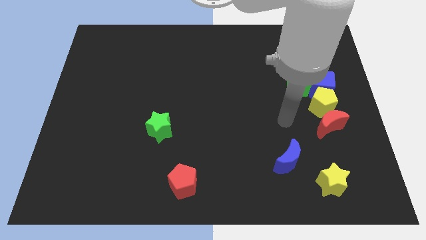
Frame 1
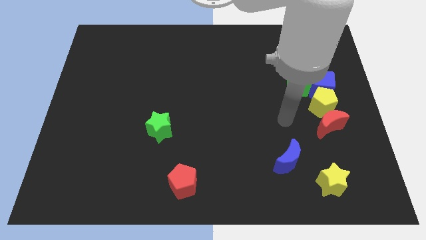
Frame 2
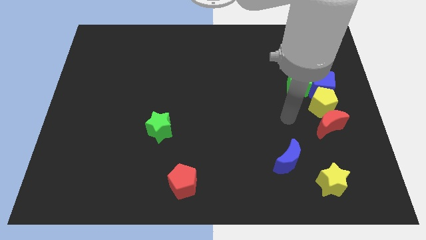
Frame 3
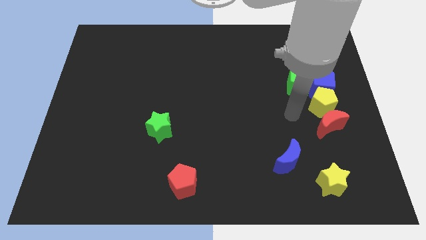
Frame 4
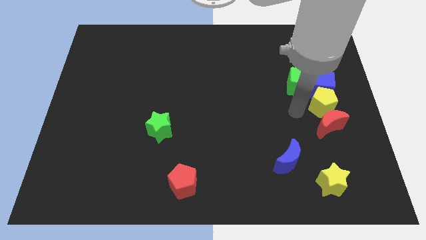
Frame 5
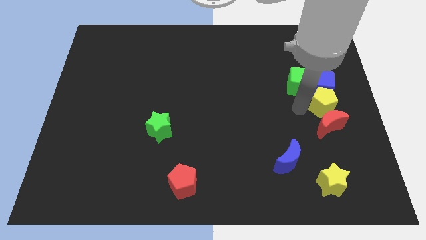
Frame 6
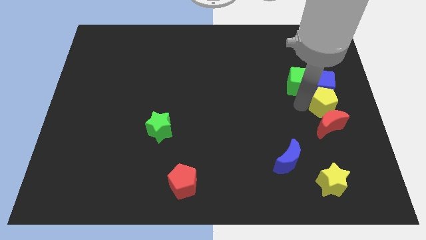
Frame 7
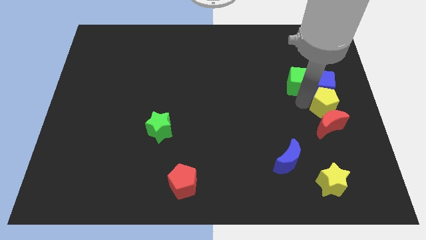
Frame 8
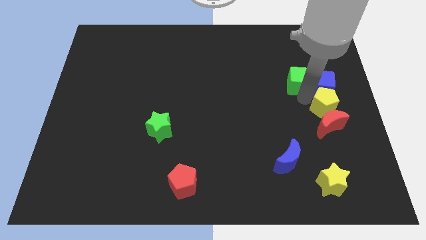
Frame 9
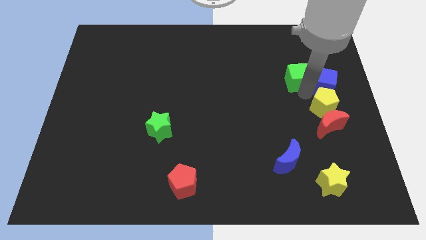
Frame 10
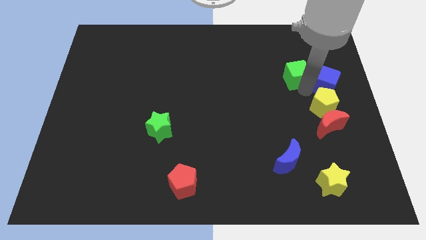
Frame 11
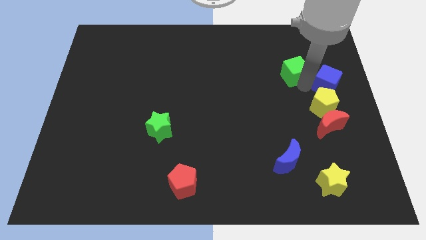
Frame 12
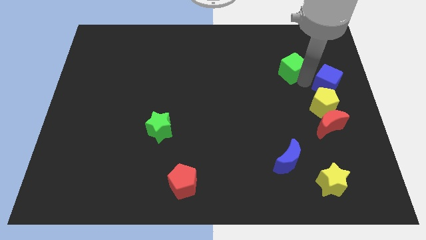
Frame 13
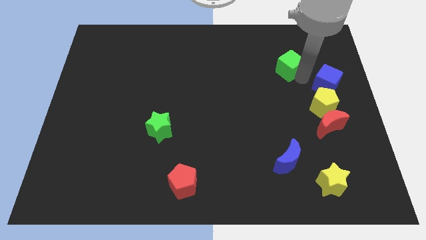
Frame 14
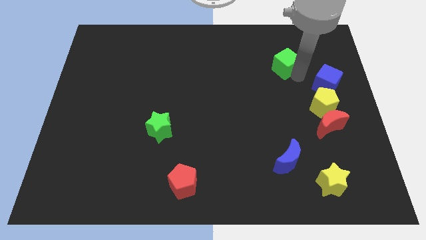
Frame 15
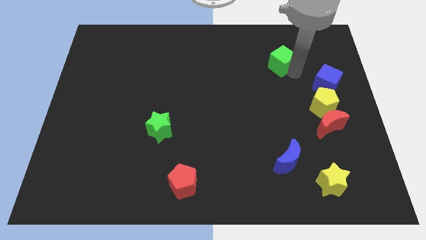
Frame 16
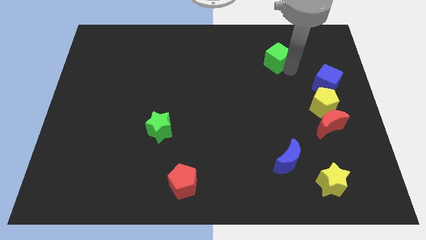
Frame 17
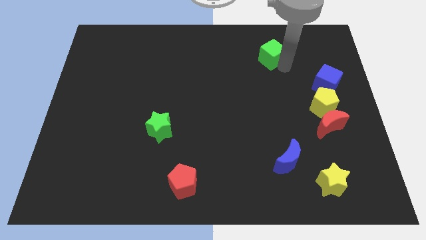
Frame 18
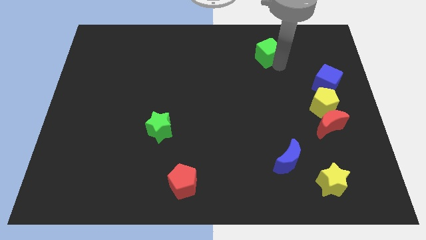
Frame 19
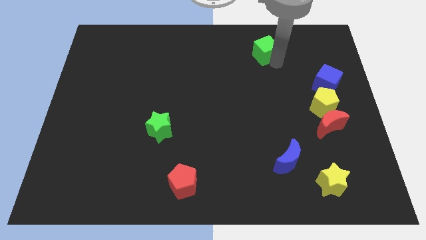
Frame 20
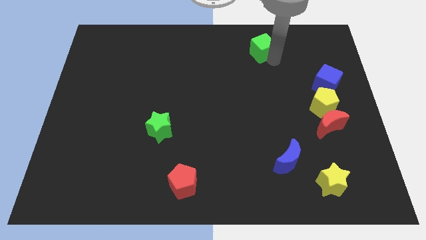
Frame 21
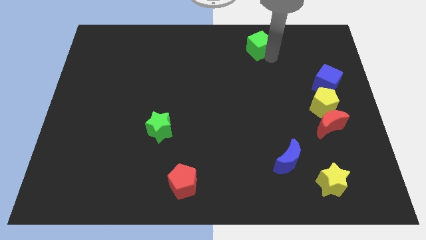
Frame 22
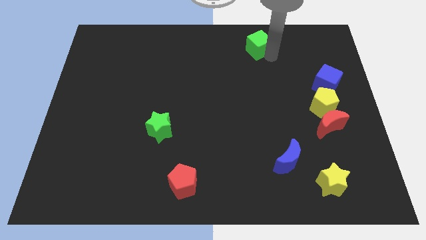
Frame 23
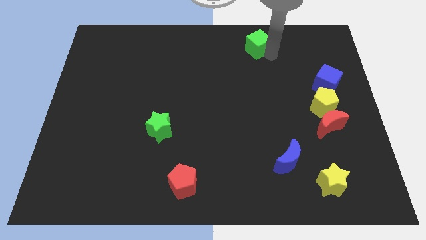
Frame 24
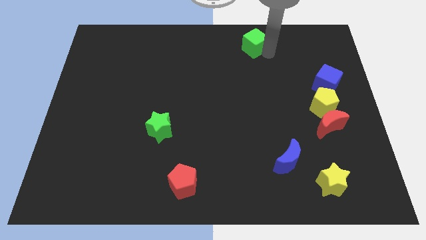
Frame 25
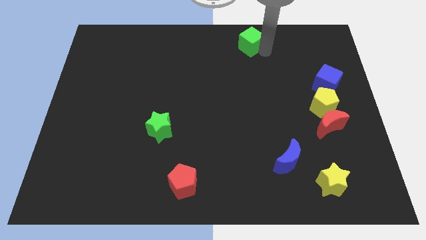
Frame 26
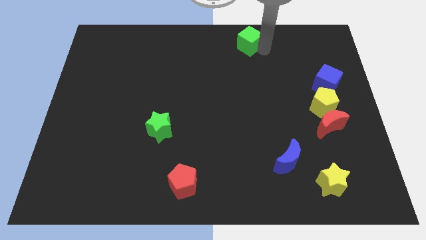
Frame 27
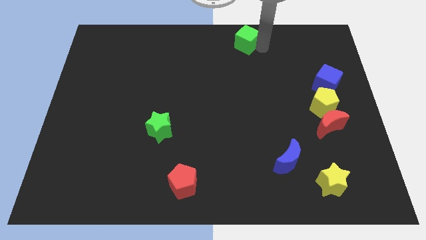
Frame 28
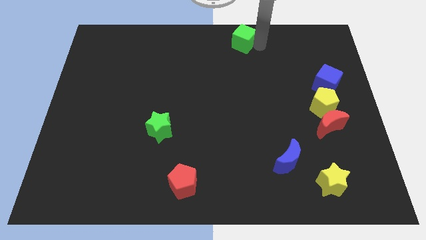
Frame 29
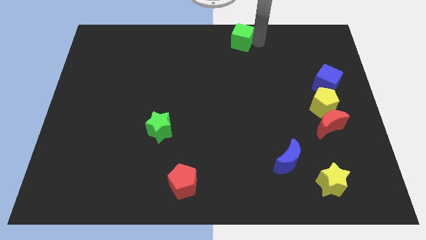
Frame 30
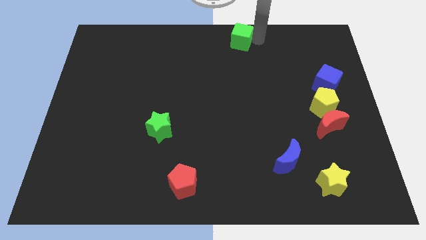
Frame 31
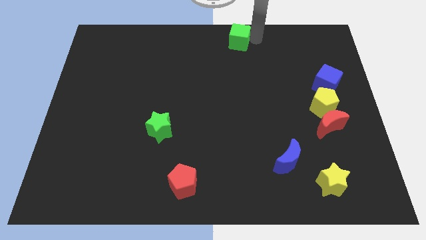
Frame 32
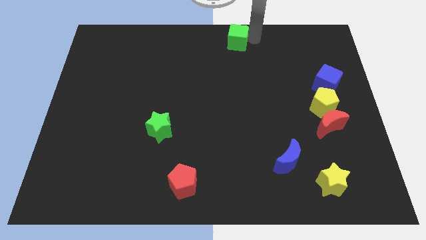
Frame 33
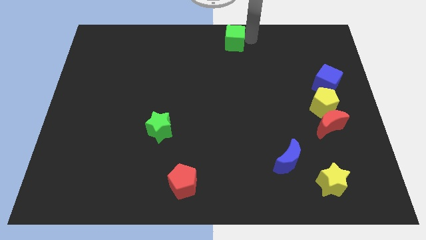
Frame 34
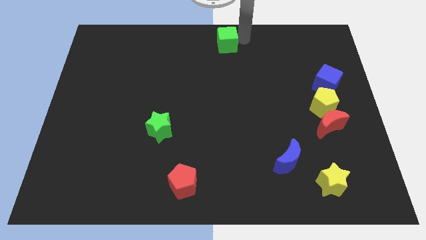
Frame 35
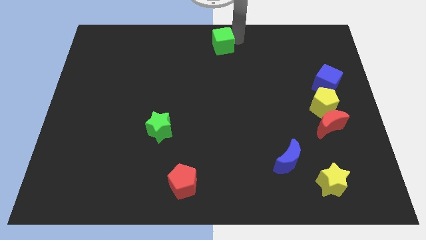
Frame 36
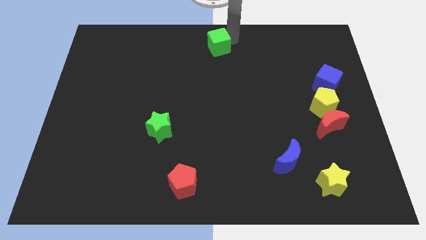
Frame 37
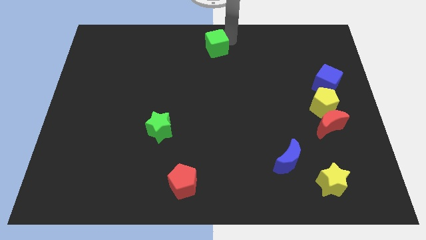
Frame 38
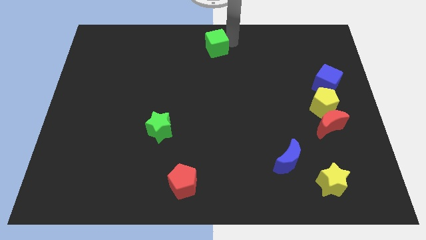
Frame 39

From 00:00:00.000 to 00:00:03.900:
move the green cube to the top center of the board

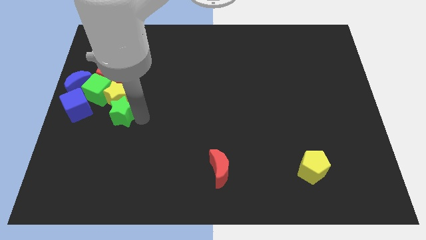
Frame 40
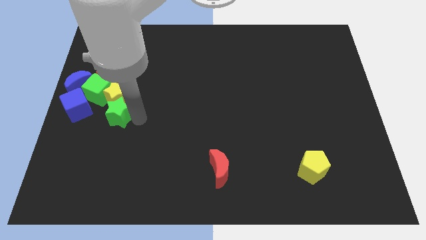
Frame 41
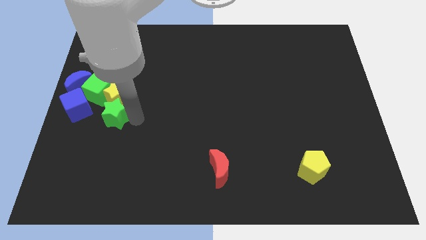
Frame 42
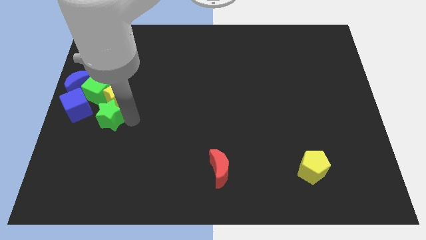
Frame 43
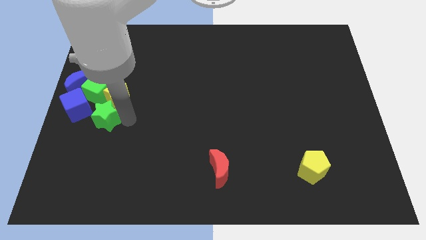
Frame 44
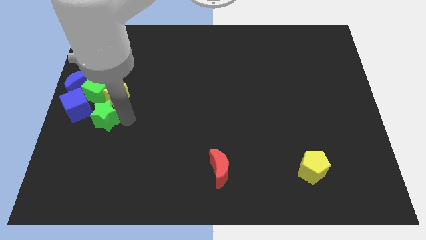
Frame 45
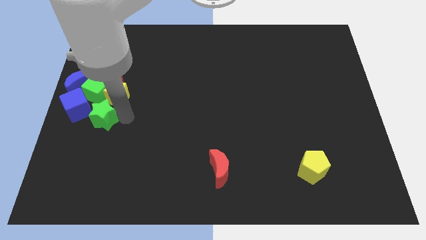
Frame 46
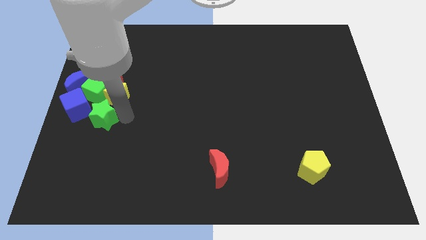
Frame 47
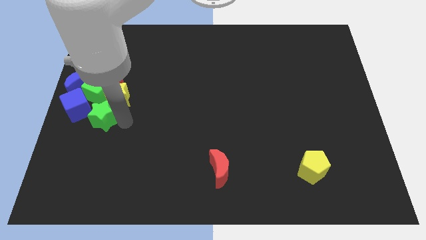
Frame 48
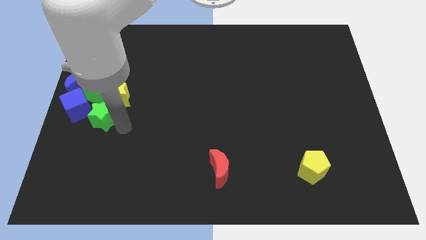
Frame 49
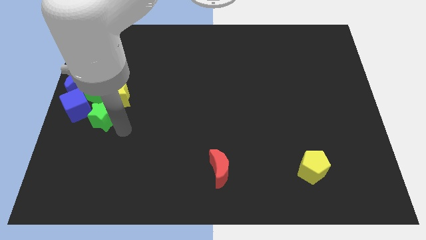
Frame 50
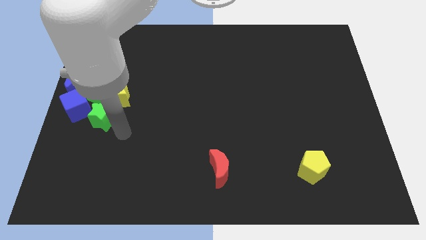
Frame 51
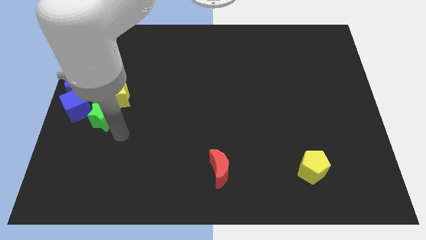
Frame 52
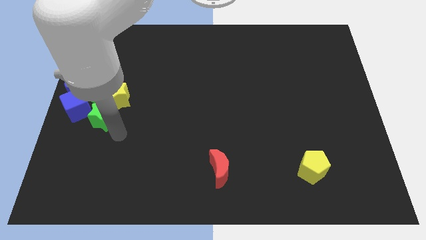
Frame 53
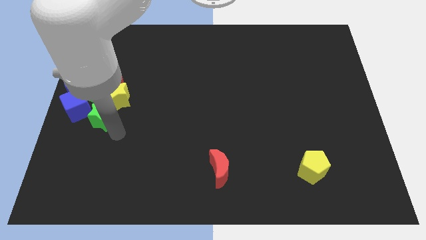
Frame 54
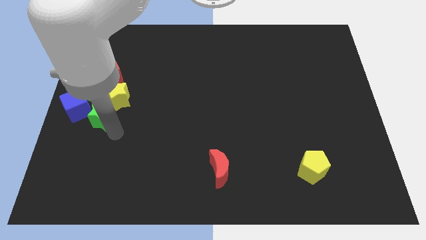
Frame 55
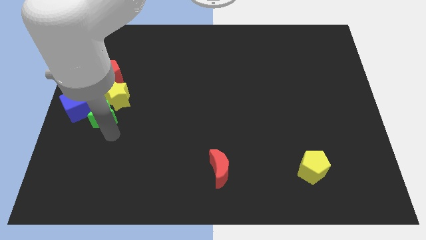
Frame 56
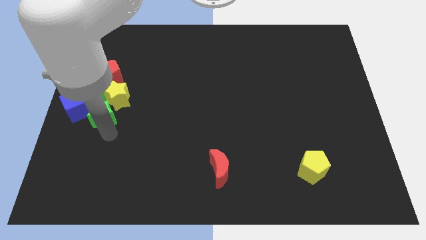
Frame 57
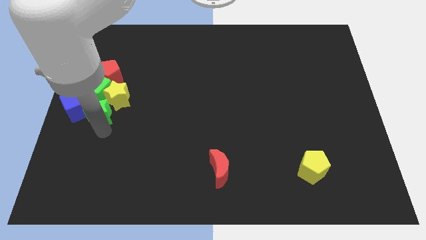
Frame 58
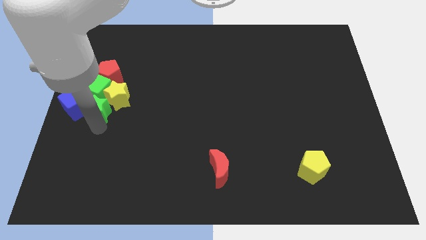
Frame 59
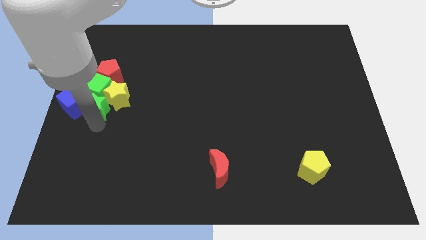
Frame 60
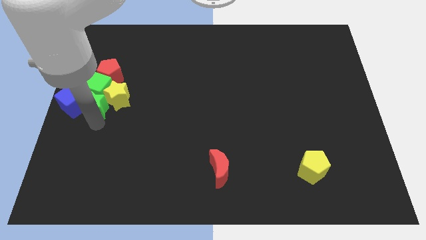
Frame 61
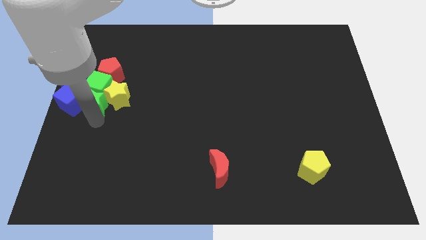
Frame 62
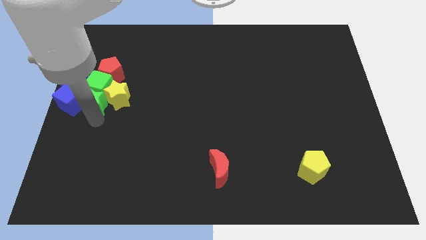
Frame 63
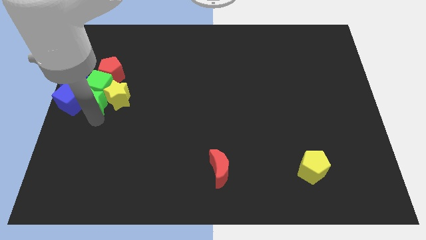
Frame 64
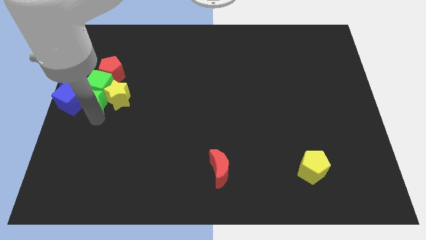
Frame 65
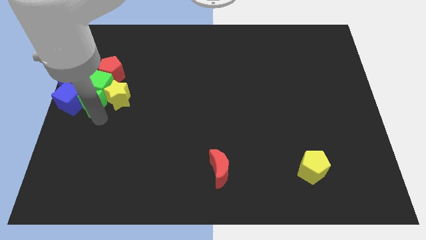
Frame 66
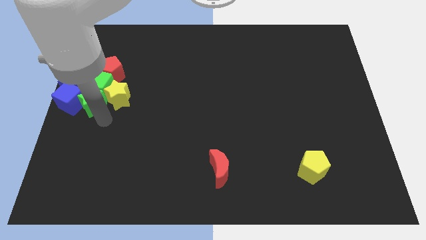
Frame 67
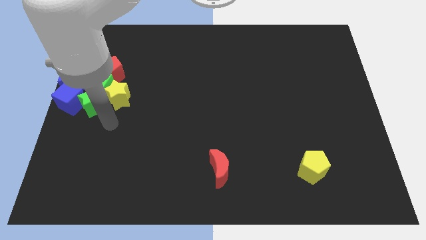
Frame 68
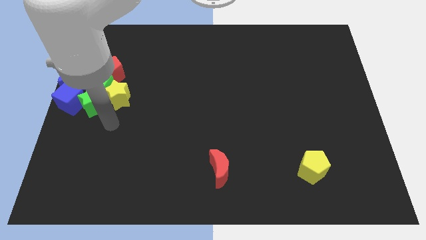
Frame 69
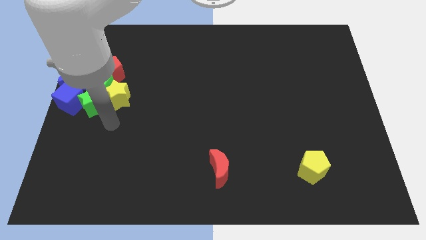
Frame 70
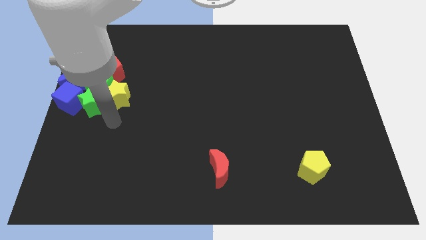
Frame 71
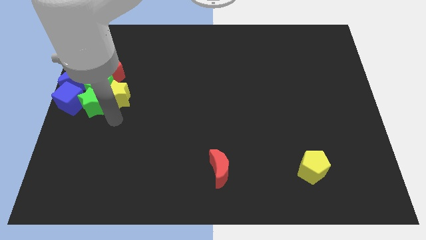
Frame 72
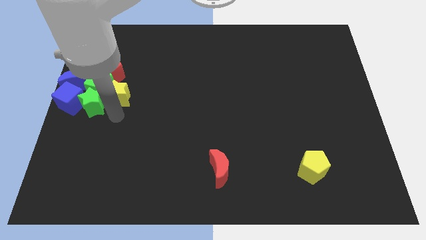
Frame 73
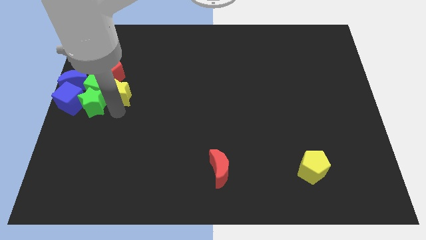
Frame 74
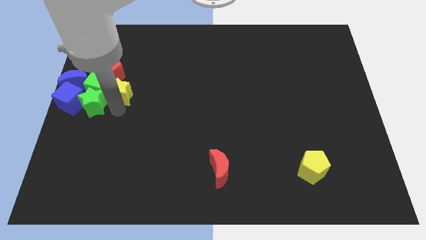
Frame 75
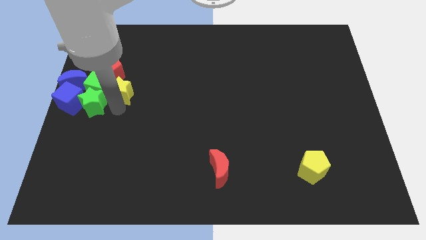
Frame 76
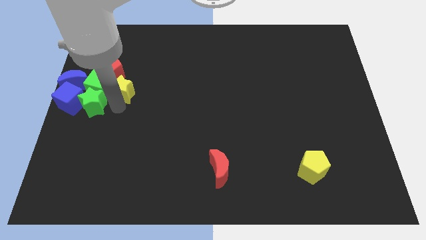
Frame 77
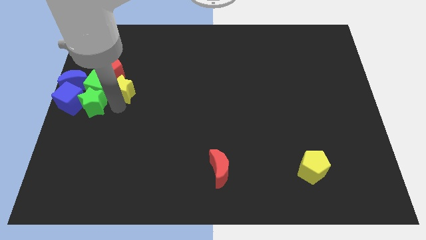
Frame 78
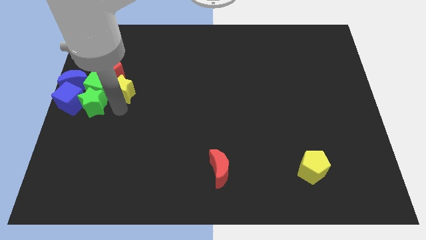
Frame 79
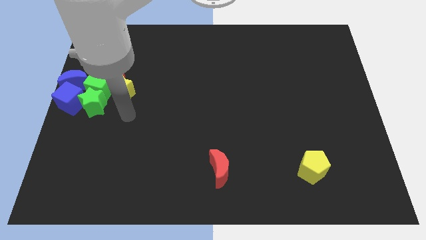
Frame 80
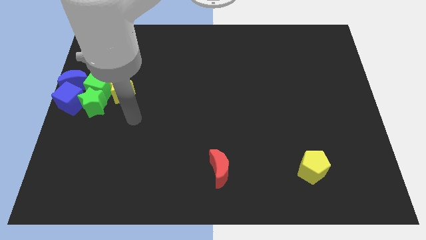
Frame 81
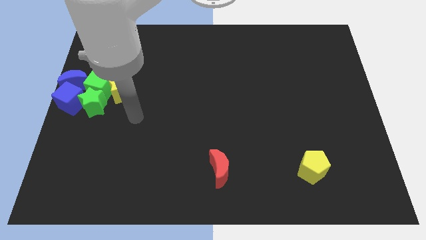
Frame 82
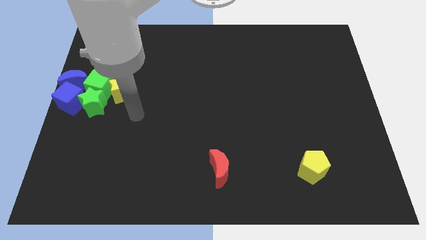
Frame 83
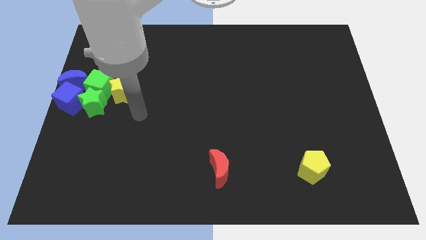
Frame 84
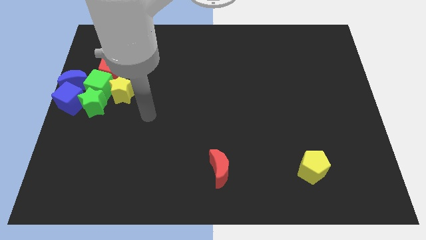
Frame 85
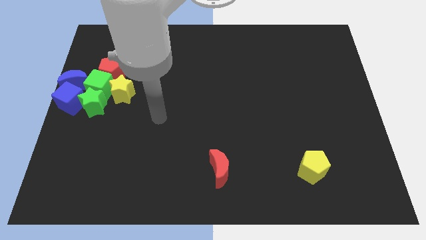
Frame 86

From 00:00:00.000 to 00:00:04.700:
push the green star to the left center of the board

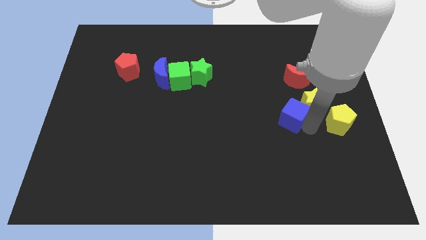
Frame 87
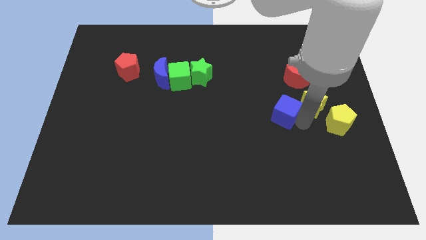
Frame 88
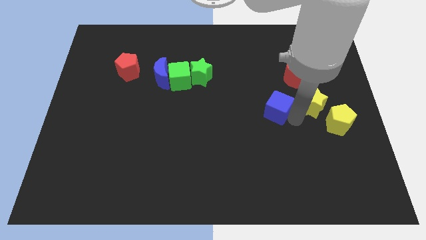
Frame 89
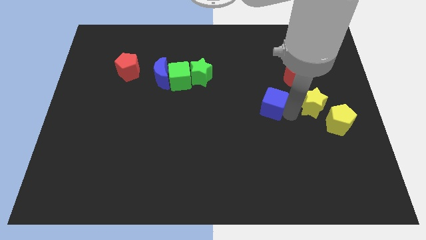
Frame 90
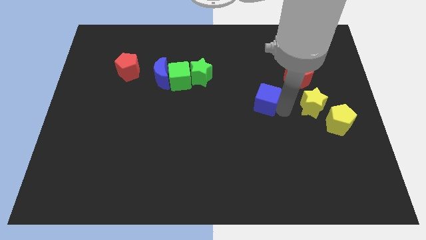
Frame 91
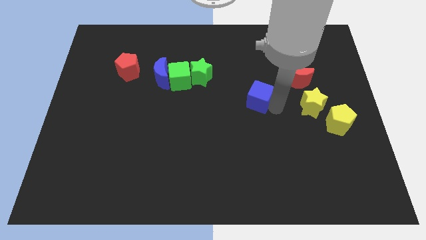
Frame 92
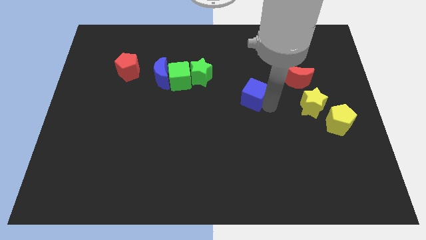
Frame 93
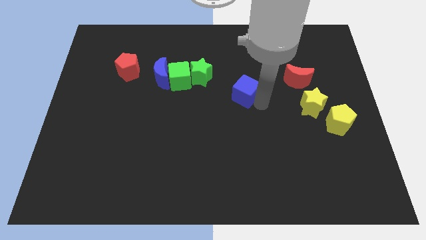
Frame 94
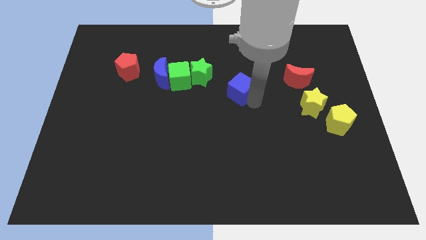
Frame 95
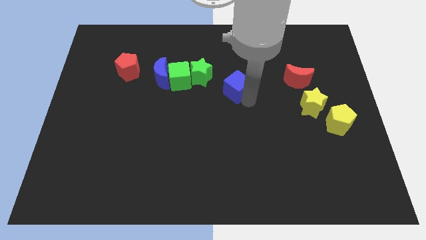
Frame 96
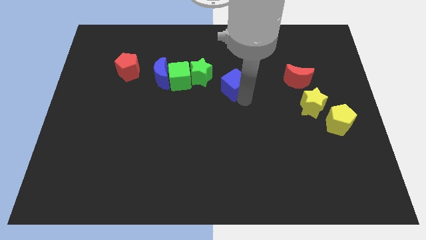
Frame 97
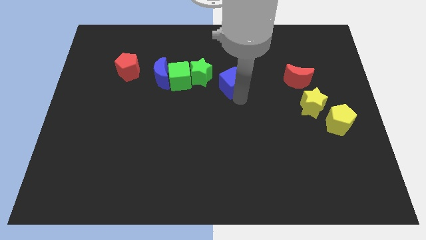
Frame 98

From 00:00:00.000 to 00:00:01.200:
place blue cube right to green star
